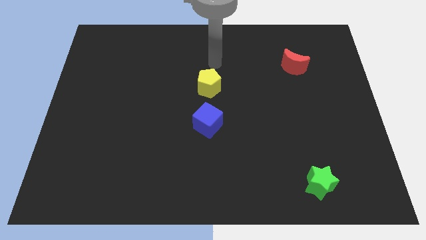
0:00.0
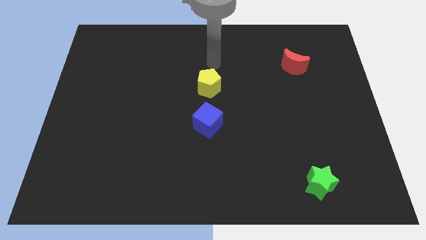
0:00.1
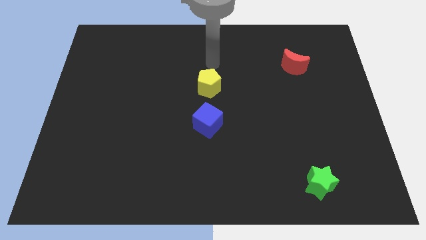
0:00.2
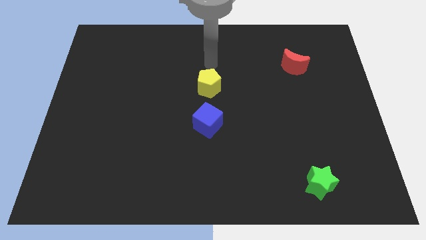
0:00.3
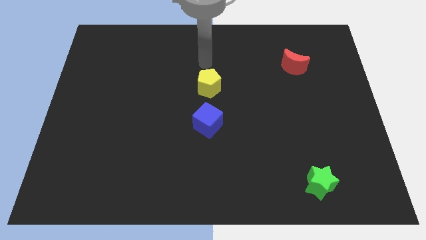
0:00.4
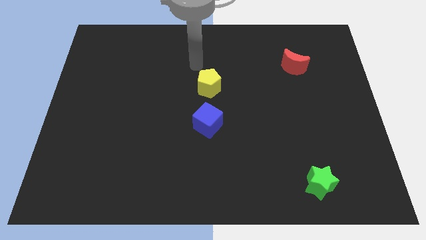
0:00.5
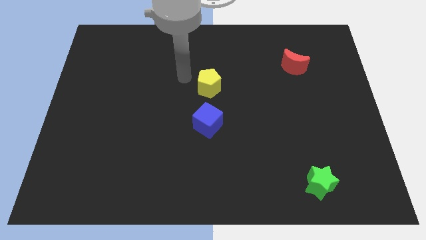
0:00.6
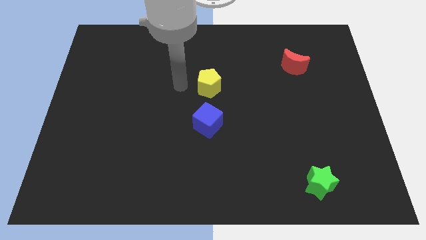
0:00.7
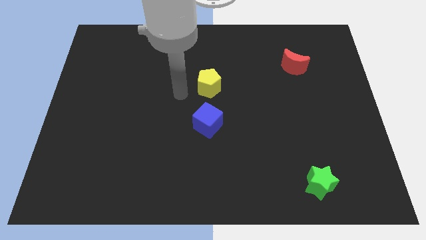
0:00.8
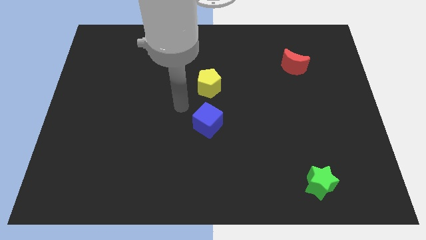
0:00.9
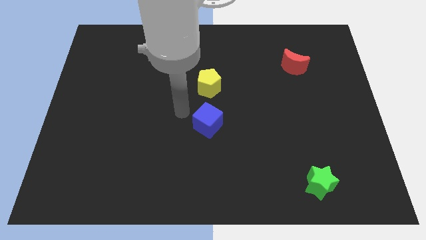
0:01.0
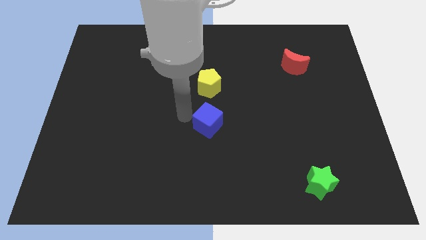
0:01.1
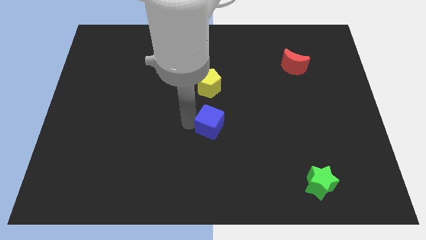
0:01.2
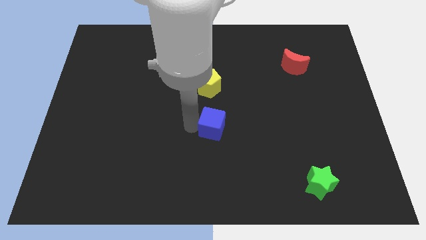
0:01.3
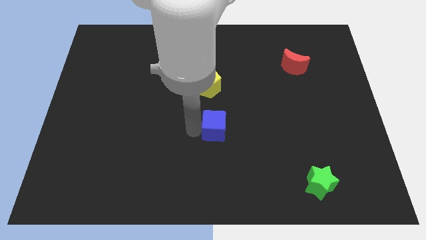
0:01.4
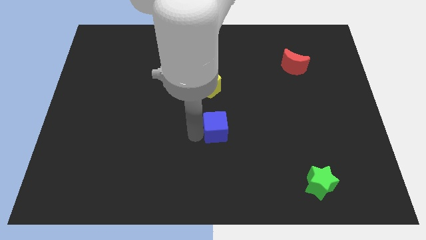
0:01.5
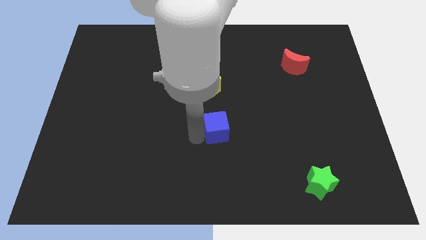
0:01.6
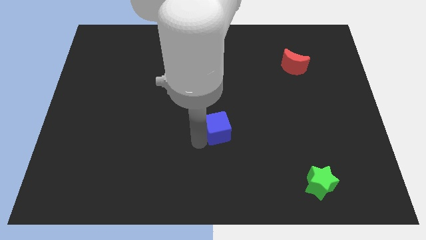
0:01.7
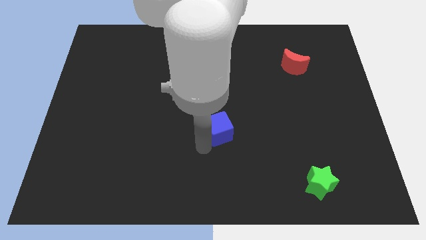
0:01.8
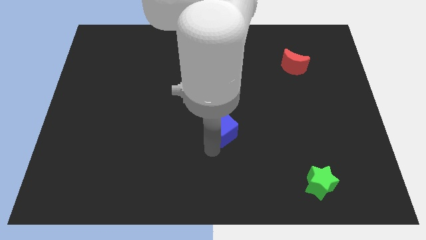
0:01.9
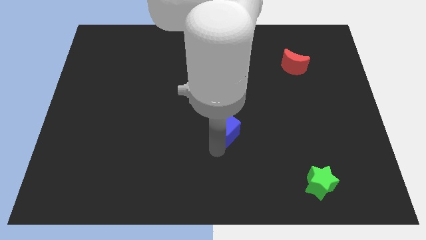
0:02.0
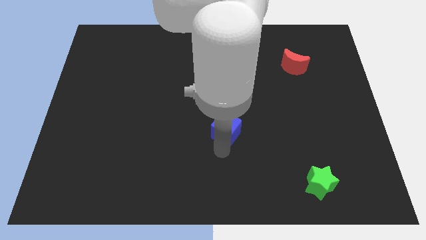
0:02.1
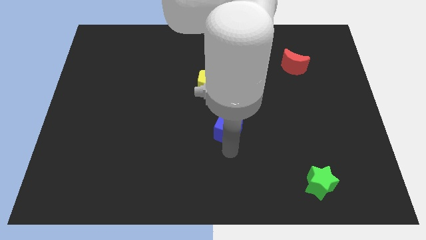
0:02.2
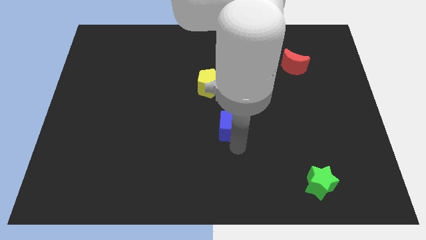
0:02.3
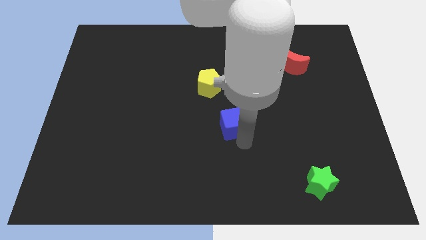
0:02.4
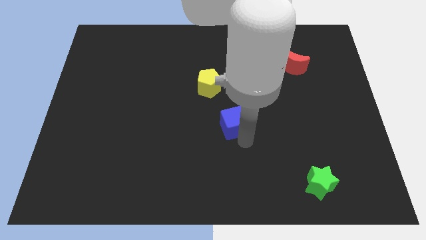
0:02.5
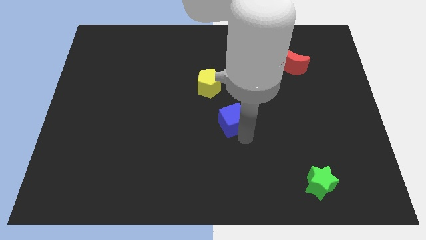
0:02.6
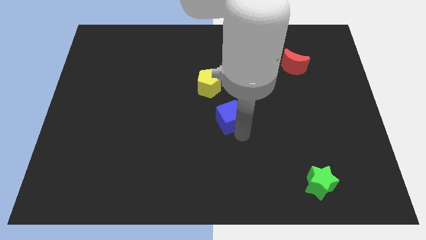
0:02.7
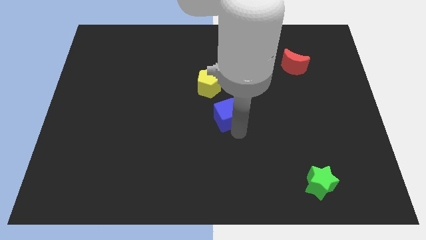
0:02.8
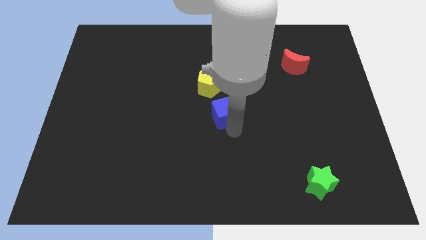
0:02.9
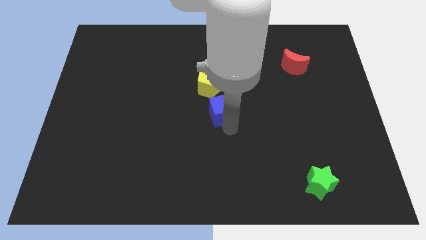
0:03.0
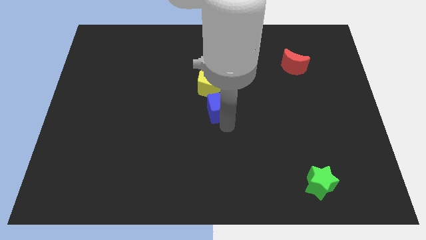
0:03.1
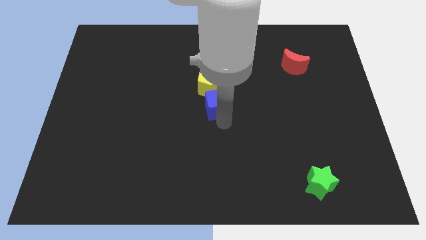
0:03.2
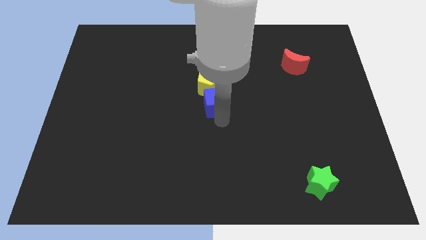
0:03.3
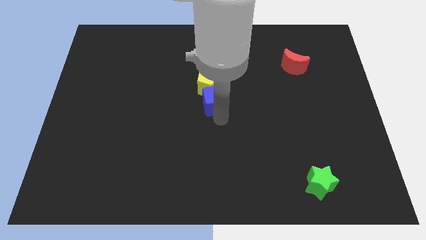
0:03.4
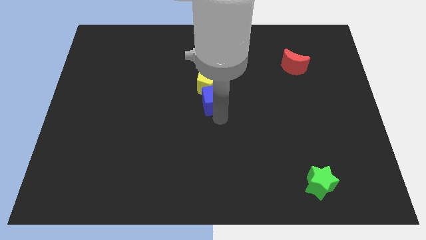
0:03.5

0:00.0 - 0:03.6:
move the blue cube to the pentagon

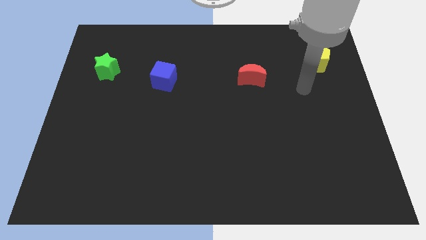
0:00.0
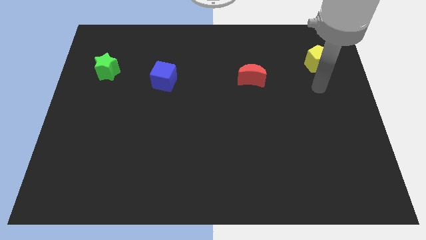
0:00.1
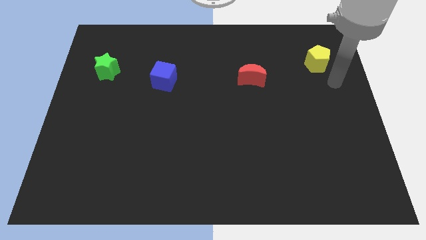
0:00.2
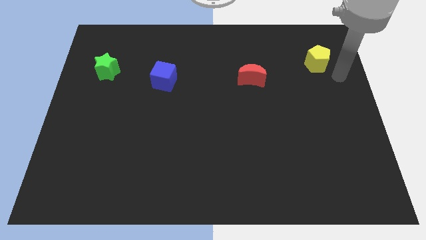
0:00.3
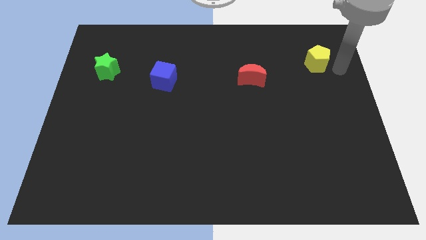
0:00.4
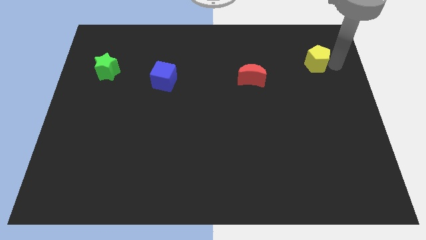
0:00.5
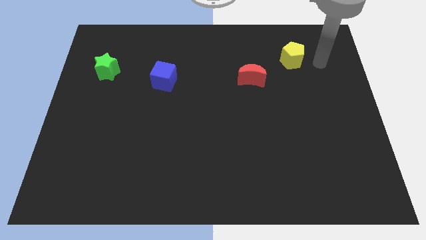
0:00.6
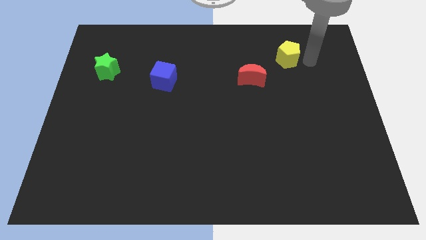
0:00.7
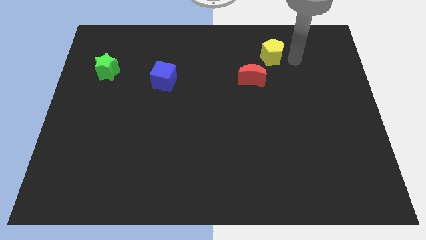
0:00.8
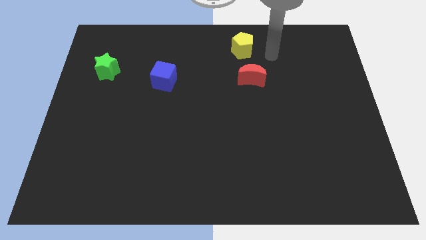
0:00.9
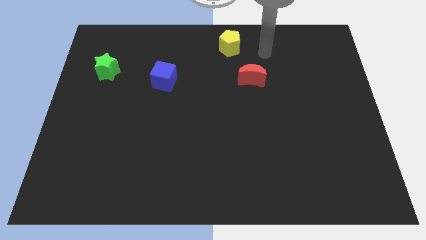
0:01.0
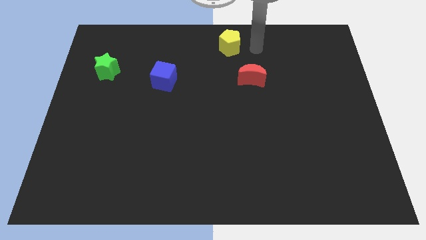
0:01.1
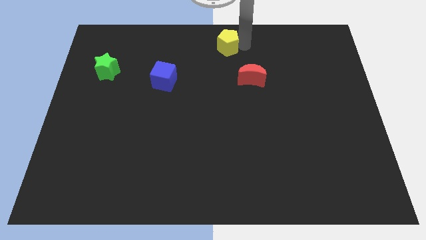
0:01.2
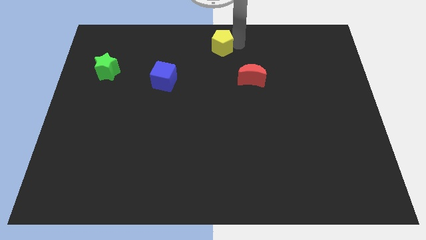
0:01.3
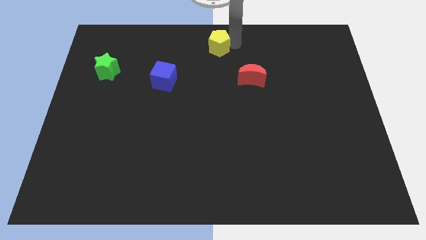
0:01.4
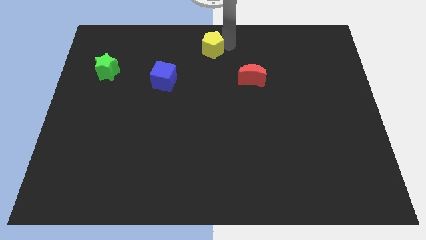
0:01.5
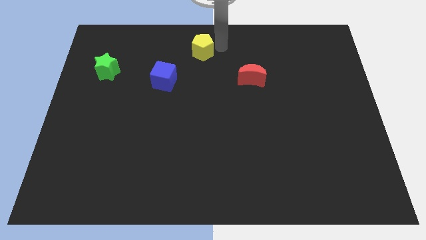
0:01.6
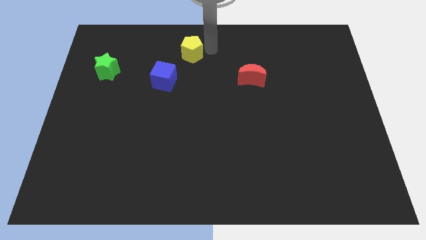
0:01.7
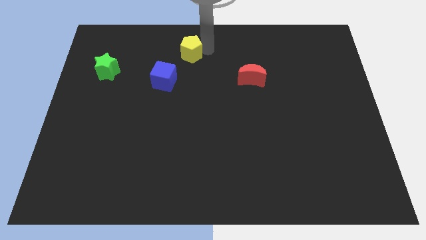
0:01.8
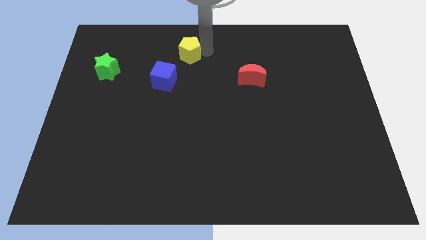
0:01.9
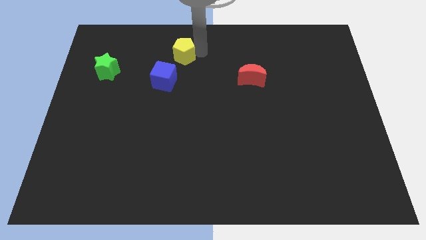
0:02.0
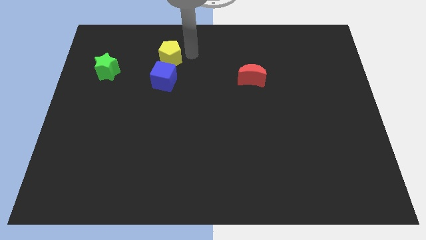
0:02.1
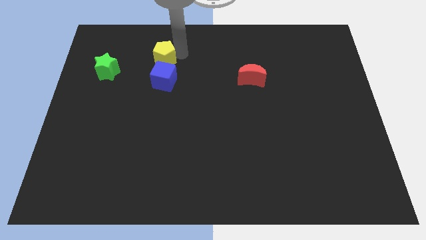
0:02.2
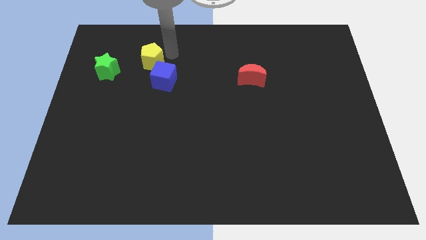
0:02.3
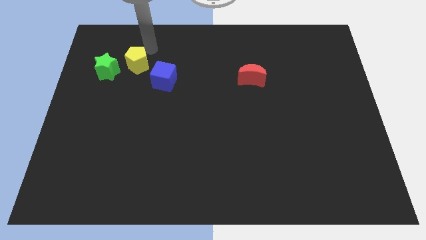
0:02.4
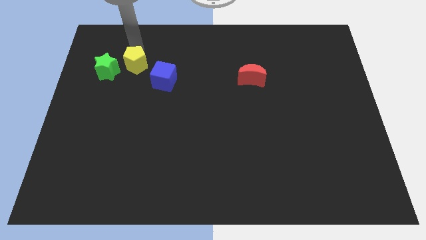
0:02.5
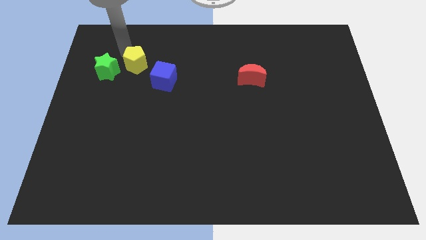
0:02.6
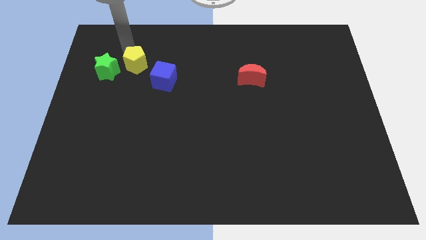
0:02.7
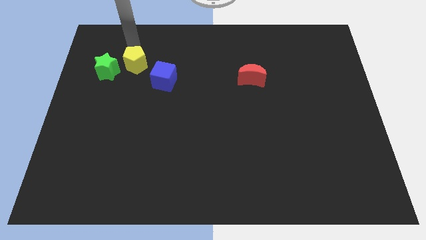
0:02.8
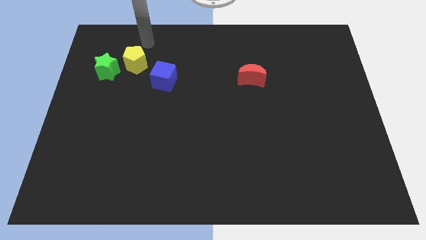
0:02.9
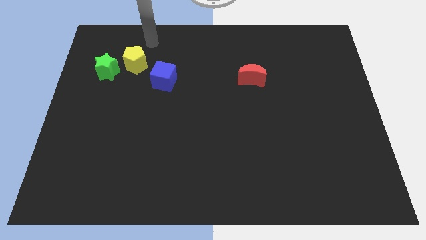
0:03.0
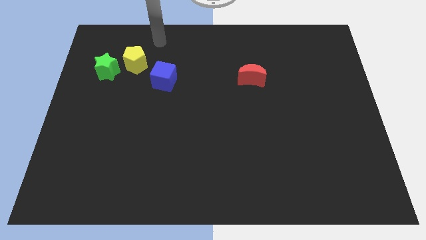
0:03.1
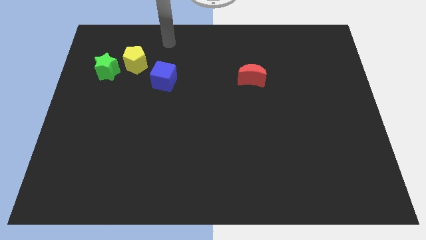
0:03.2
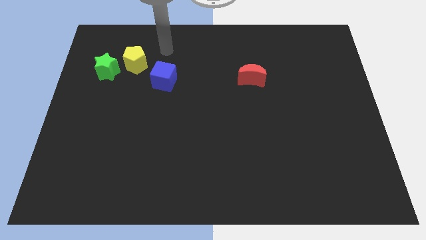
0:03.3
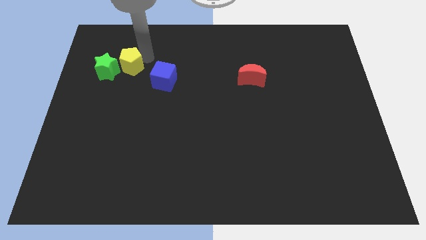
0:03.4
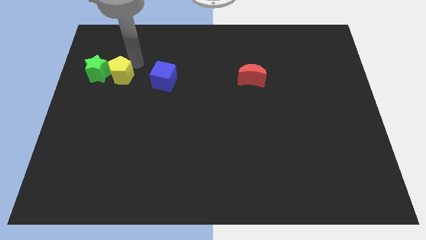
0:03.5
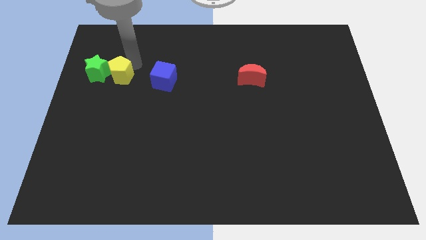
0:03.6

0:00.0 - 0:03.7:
slide the yellow pentagon next to the star

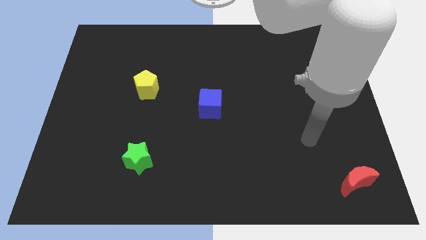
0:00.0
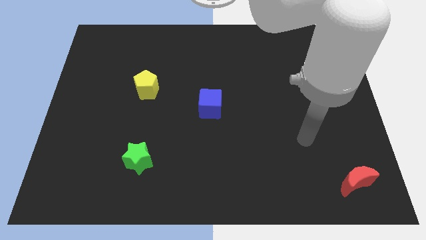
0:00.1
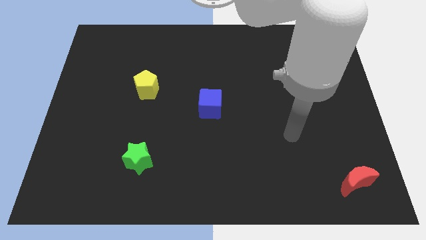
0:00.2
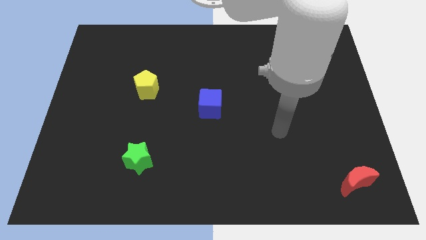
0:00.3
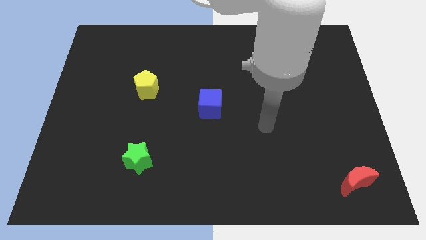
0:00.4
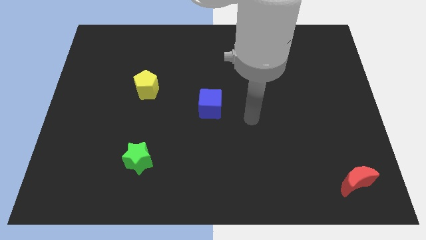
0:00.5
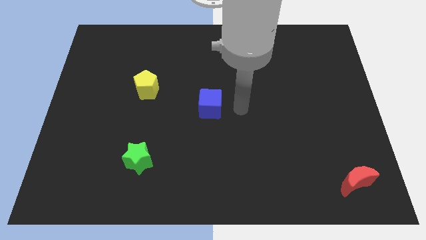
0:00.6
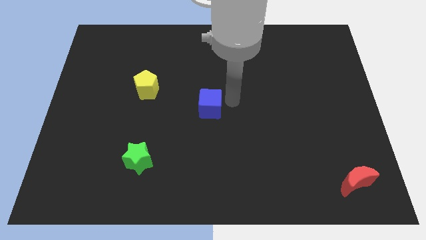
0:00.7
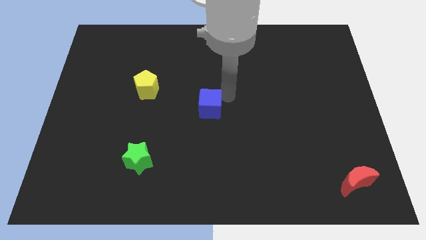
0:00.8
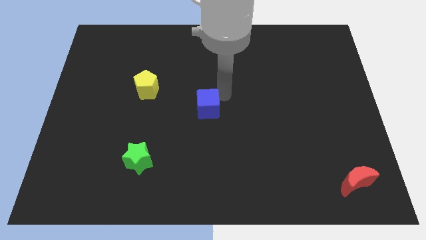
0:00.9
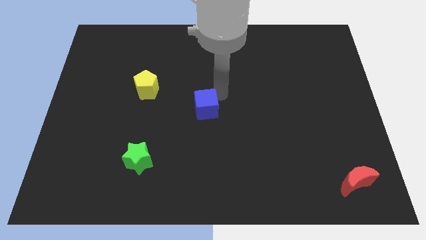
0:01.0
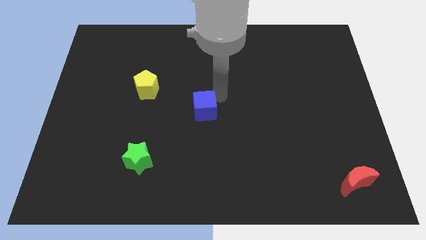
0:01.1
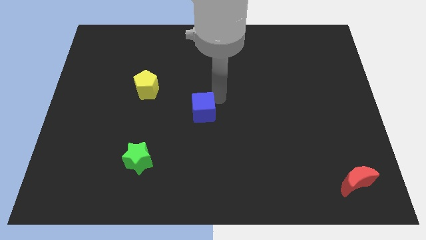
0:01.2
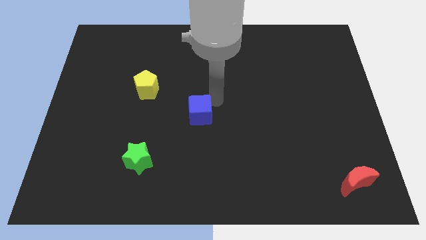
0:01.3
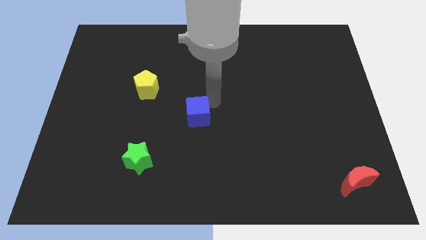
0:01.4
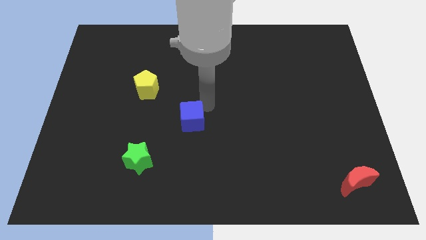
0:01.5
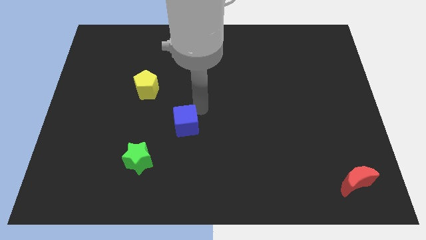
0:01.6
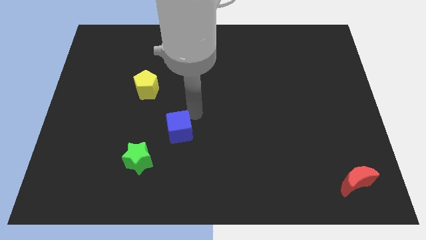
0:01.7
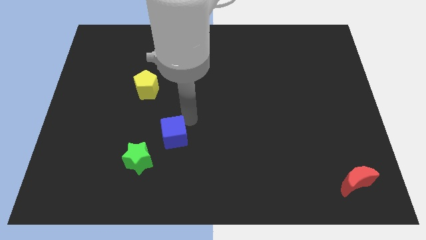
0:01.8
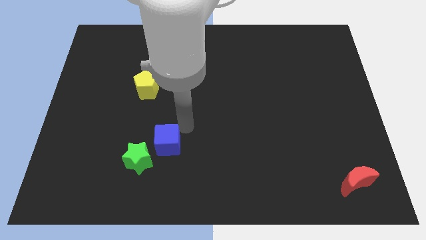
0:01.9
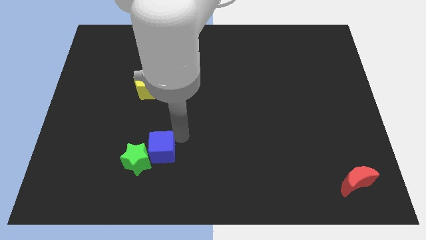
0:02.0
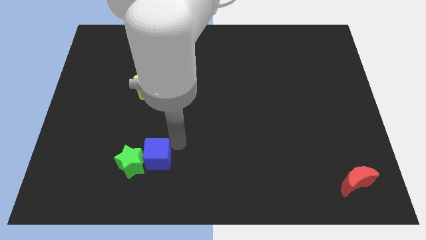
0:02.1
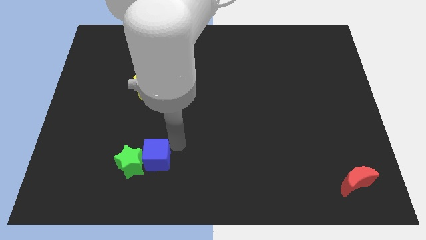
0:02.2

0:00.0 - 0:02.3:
put the cube to the green block
